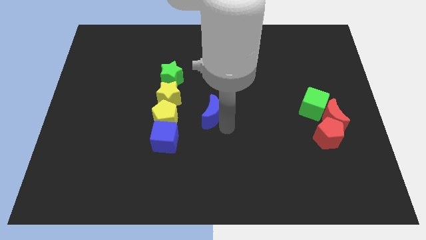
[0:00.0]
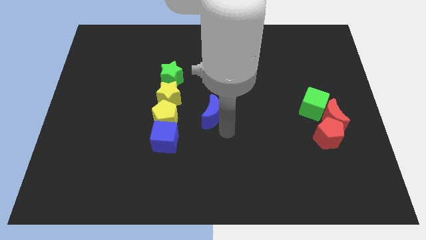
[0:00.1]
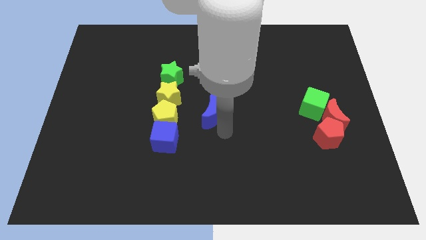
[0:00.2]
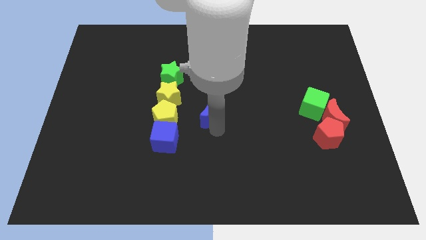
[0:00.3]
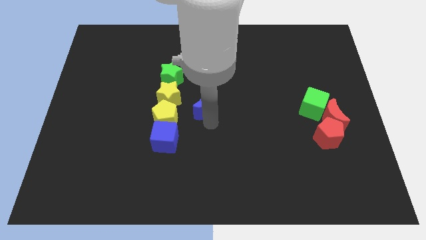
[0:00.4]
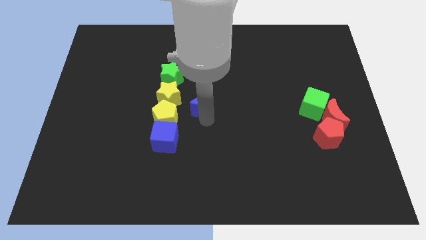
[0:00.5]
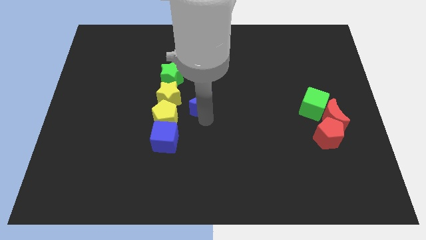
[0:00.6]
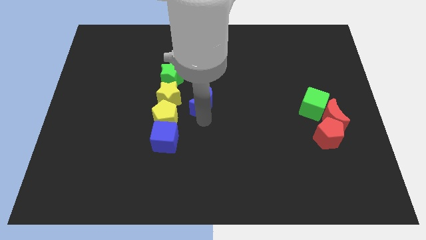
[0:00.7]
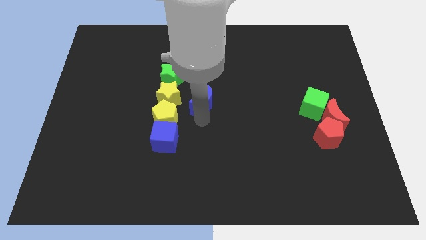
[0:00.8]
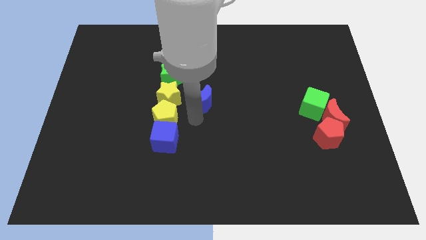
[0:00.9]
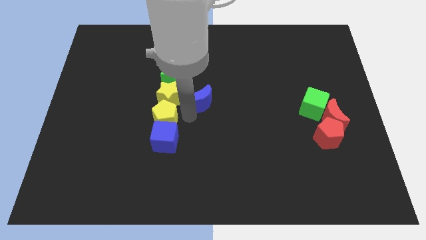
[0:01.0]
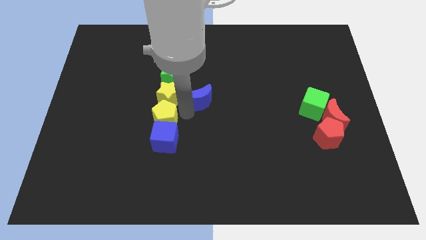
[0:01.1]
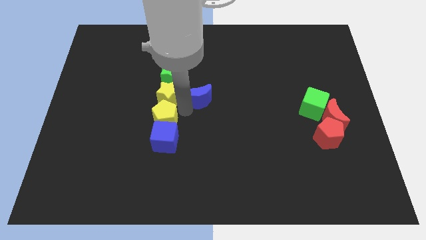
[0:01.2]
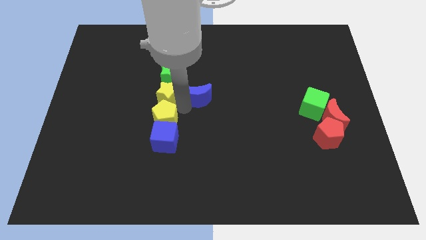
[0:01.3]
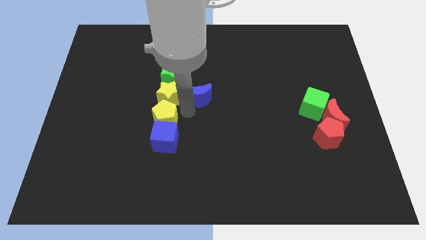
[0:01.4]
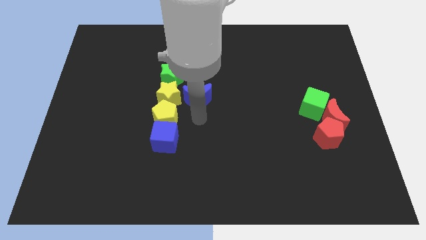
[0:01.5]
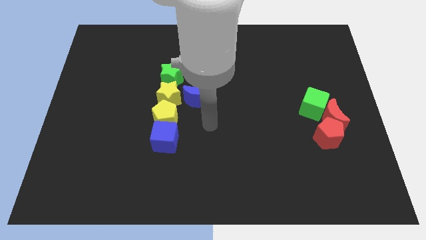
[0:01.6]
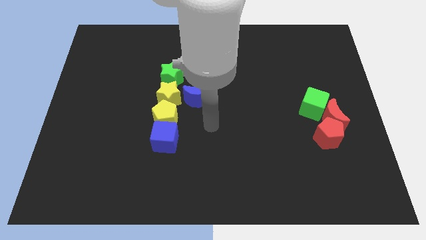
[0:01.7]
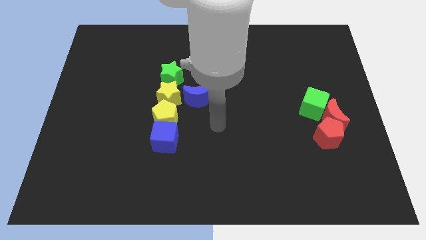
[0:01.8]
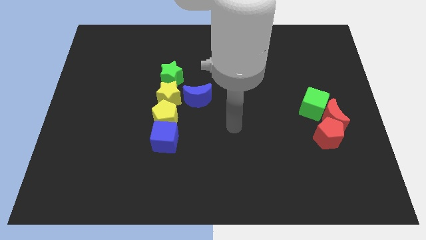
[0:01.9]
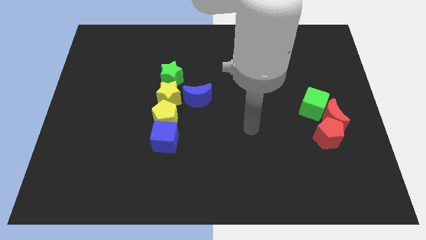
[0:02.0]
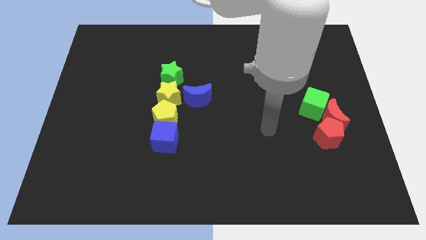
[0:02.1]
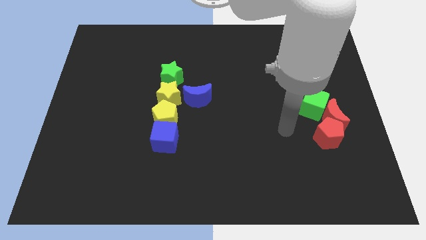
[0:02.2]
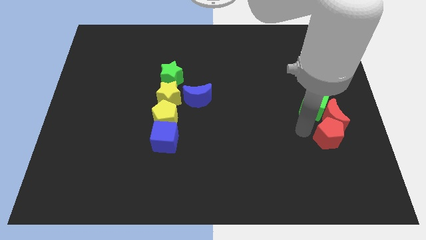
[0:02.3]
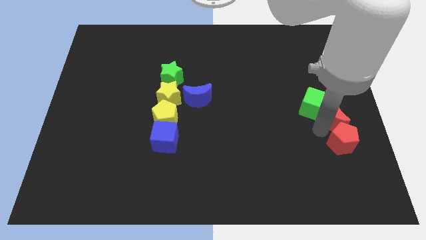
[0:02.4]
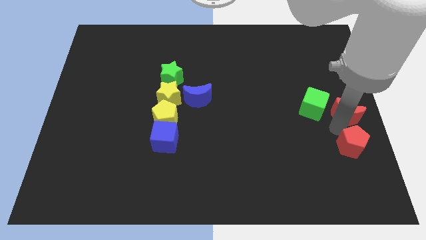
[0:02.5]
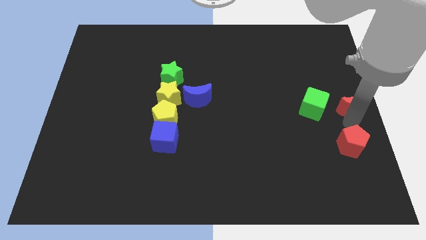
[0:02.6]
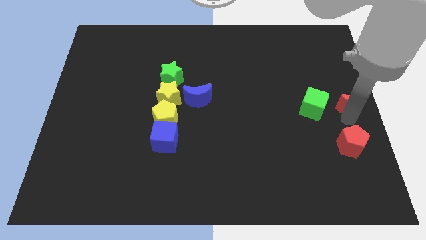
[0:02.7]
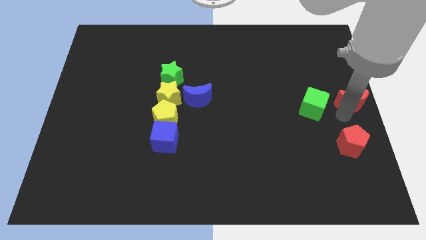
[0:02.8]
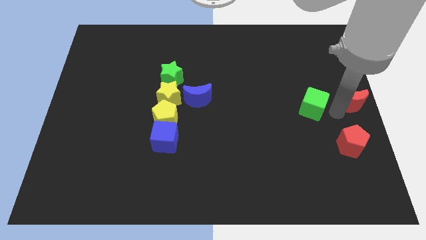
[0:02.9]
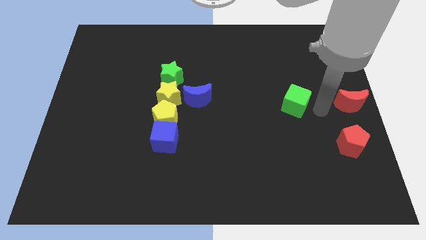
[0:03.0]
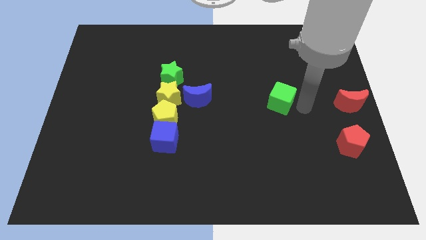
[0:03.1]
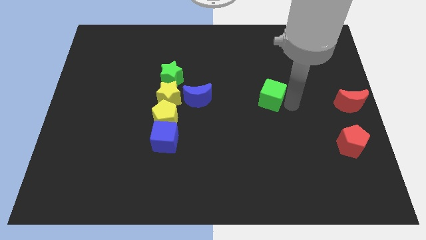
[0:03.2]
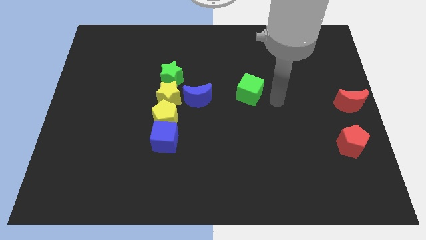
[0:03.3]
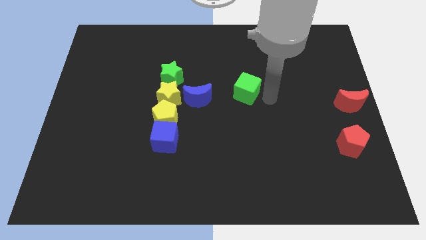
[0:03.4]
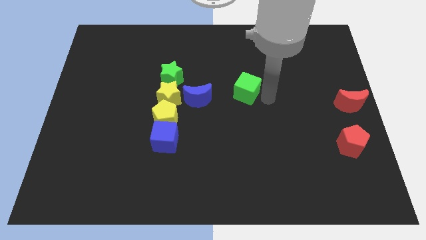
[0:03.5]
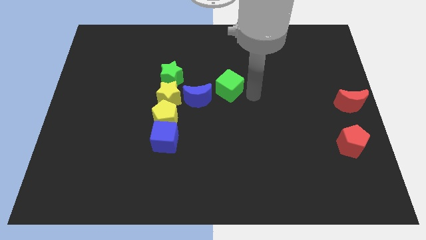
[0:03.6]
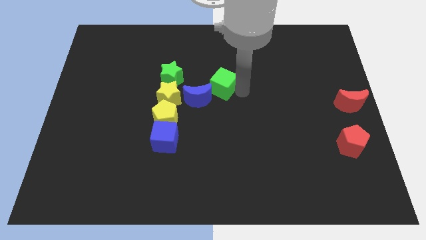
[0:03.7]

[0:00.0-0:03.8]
separate the green cube and red moon

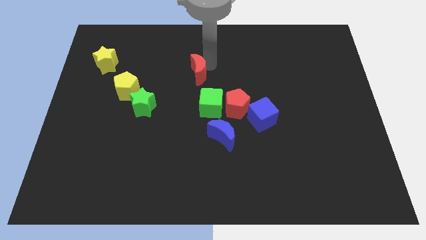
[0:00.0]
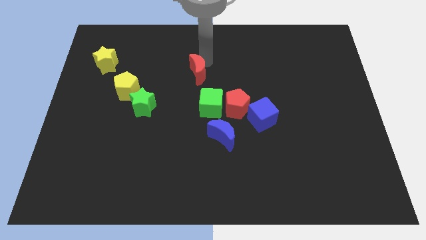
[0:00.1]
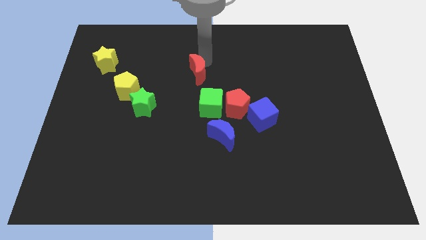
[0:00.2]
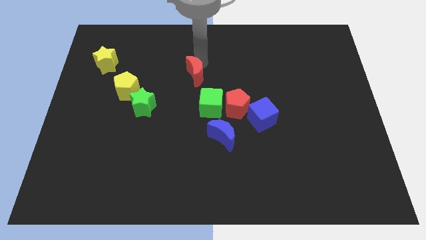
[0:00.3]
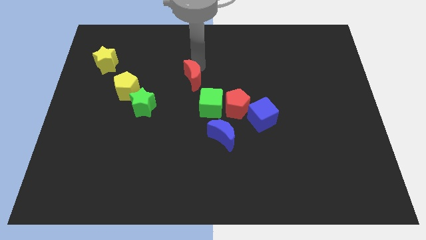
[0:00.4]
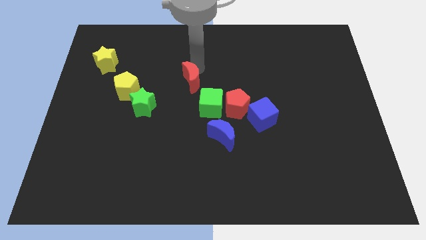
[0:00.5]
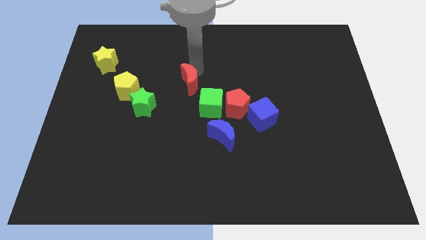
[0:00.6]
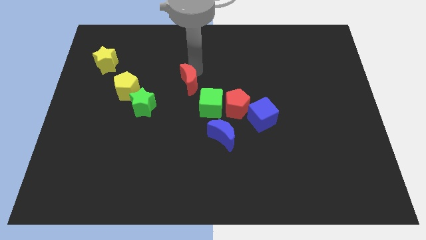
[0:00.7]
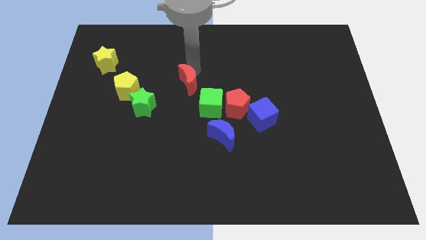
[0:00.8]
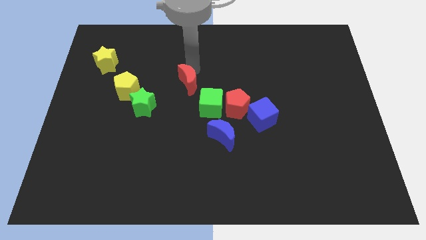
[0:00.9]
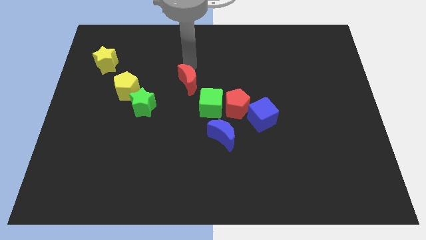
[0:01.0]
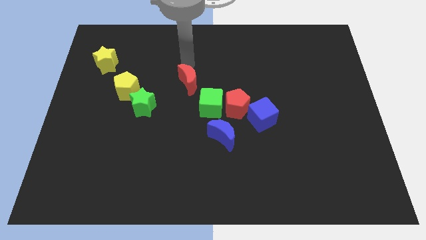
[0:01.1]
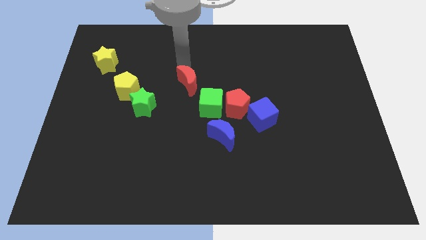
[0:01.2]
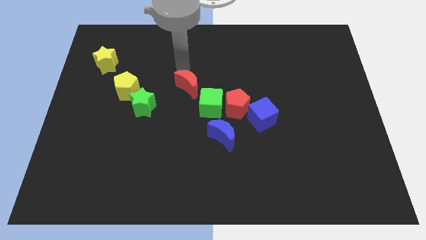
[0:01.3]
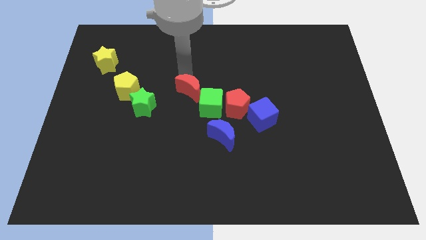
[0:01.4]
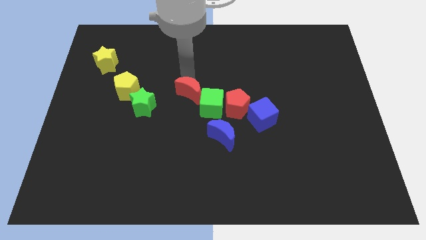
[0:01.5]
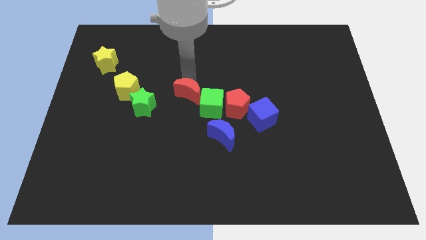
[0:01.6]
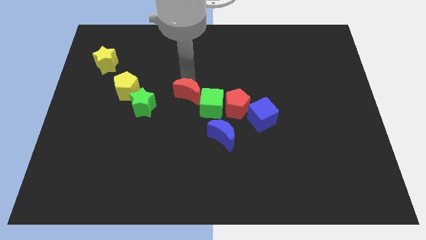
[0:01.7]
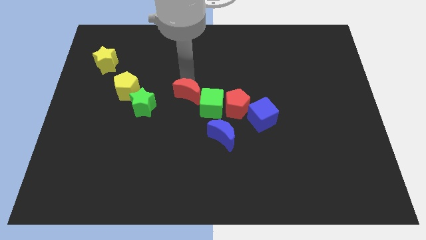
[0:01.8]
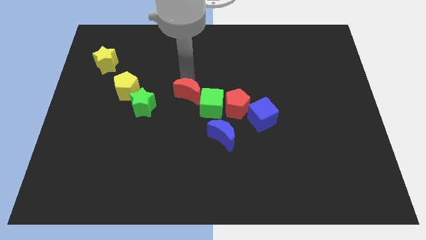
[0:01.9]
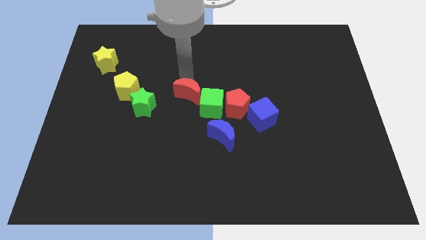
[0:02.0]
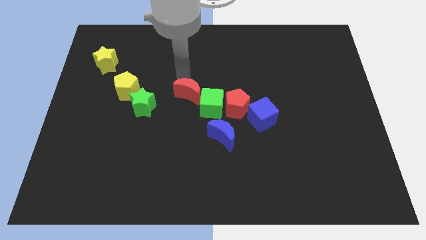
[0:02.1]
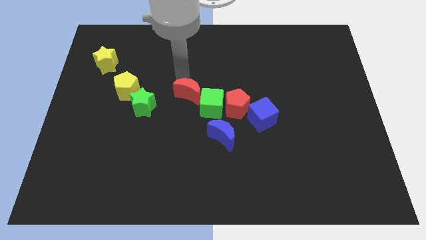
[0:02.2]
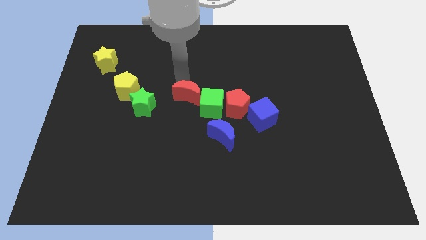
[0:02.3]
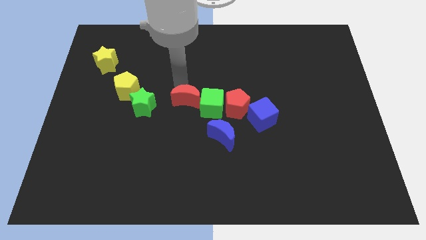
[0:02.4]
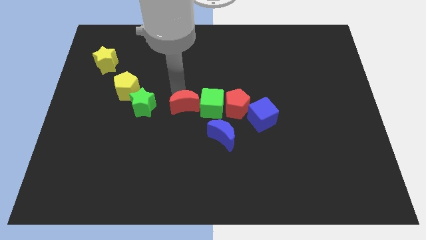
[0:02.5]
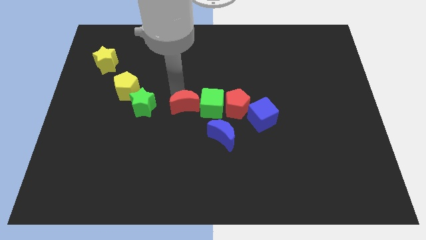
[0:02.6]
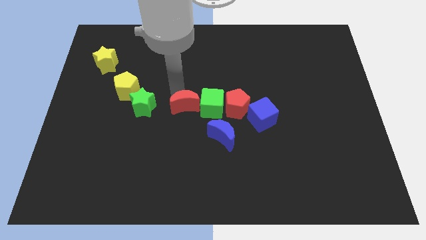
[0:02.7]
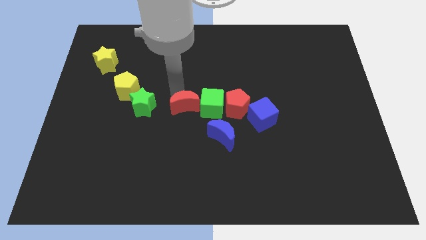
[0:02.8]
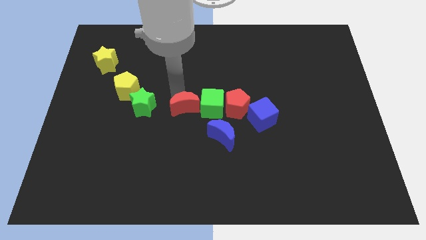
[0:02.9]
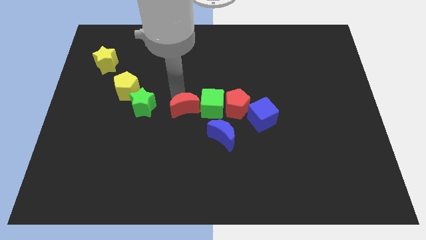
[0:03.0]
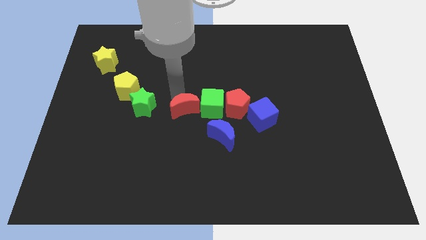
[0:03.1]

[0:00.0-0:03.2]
push the red moon to the left of the green cube

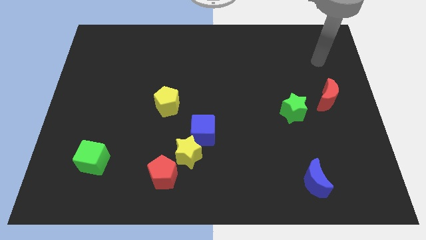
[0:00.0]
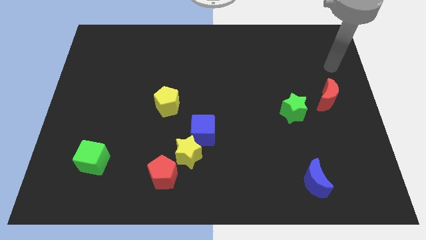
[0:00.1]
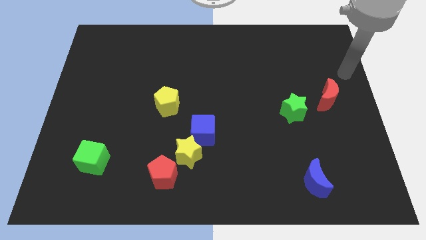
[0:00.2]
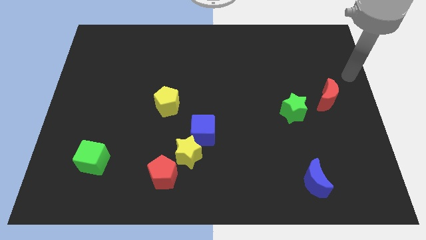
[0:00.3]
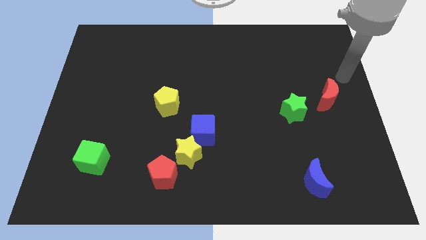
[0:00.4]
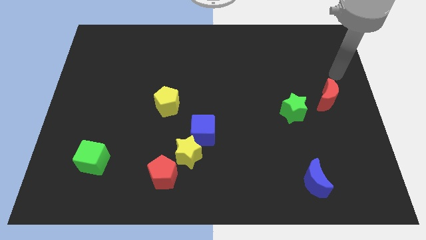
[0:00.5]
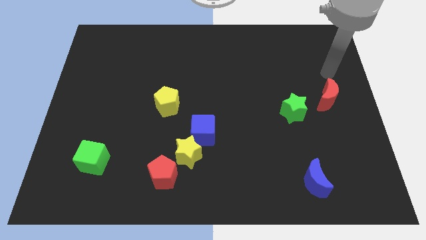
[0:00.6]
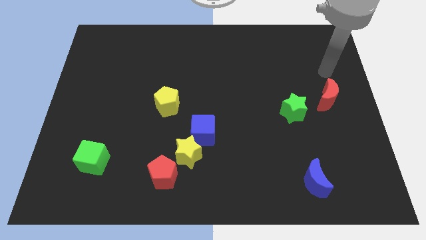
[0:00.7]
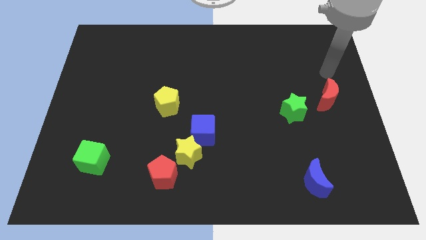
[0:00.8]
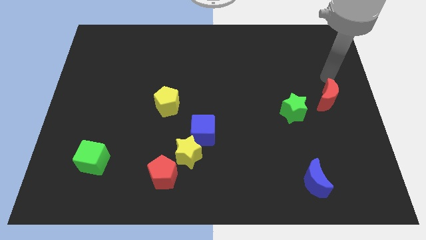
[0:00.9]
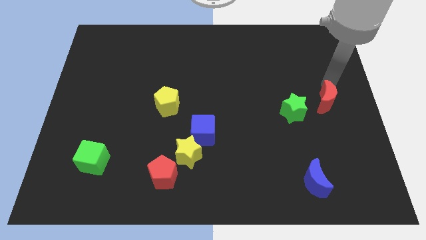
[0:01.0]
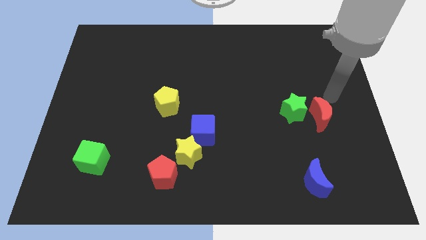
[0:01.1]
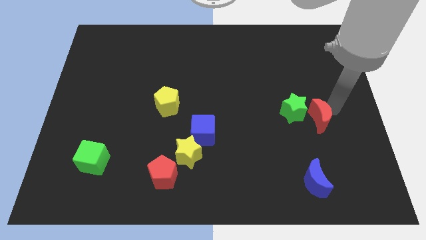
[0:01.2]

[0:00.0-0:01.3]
move the red crescent right to the green star

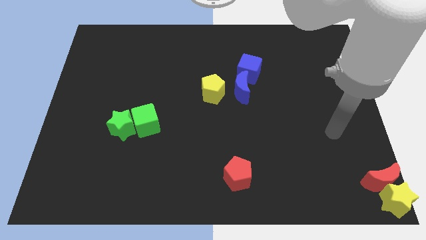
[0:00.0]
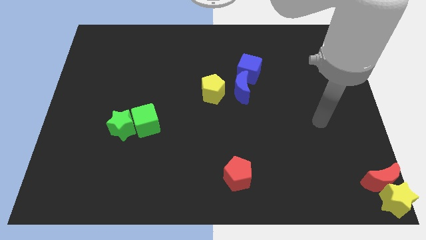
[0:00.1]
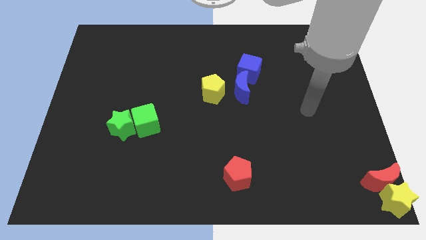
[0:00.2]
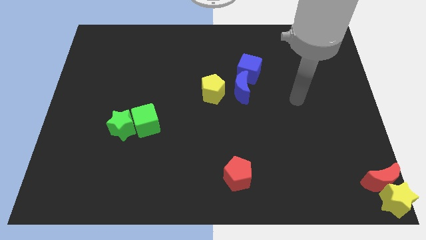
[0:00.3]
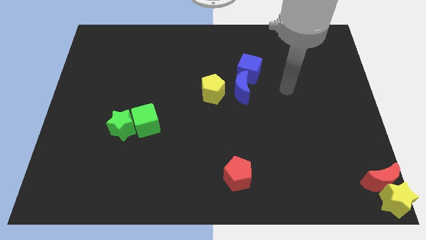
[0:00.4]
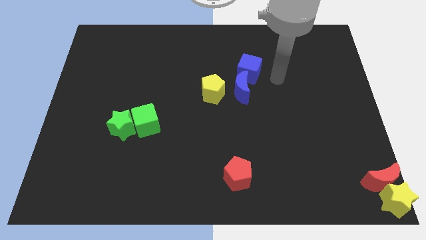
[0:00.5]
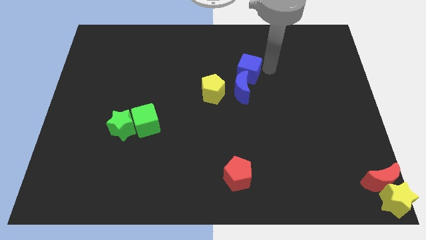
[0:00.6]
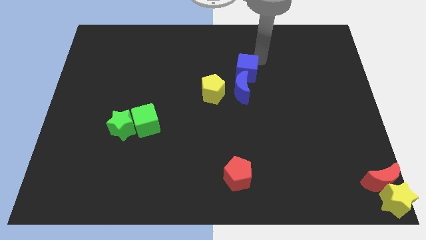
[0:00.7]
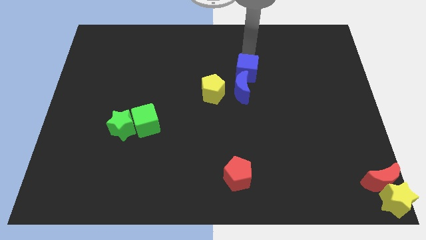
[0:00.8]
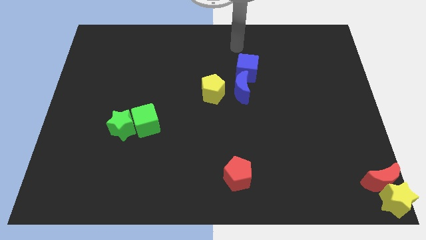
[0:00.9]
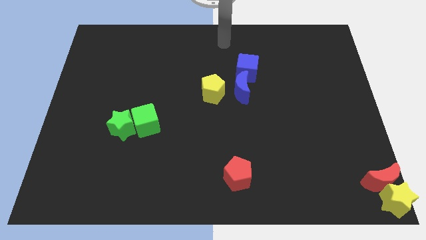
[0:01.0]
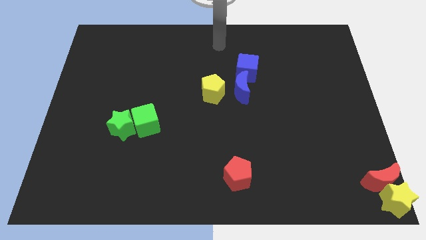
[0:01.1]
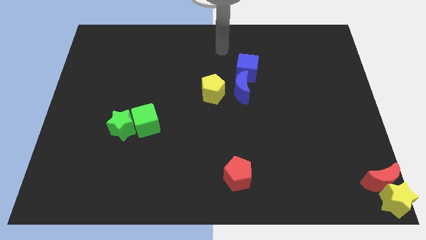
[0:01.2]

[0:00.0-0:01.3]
touch the blue cube
